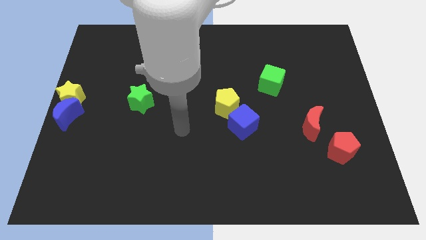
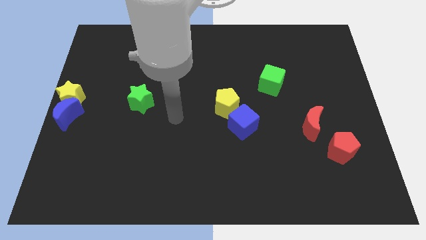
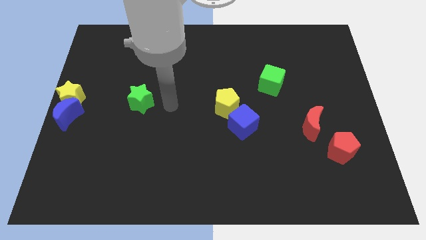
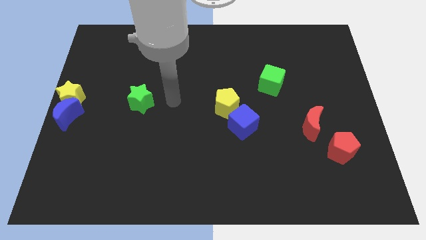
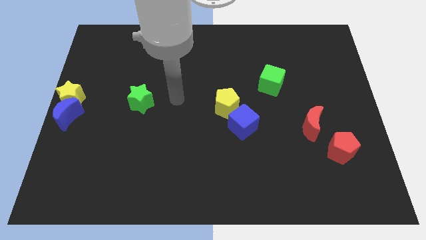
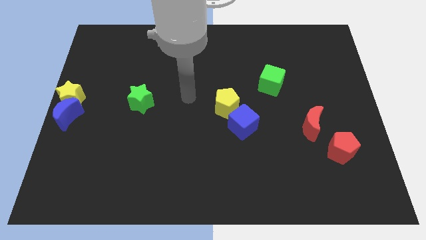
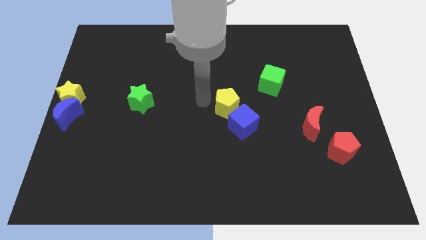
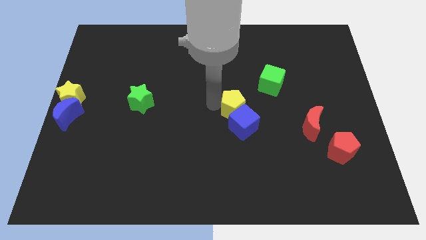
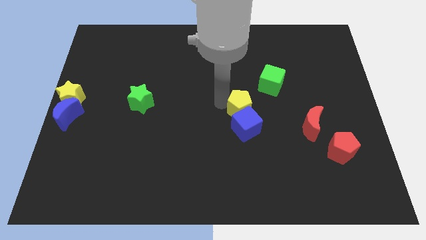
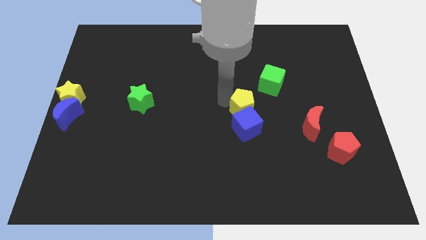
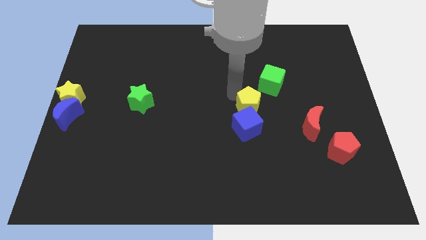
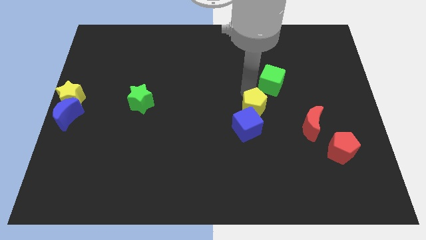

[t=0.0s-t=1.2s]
put the yellow pentagon at the top of the blue cube

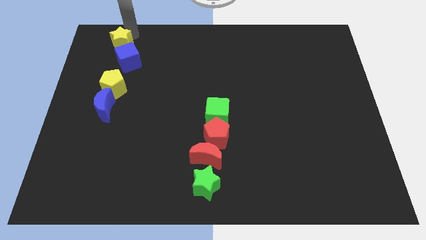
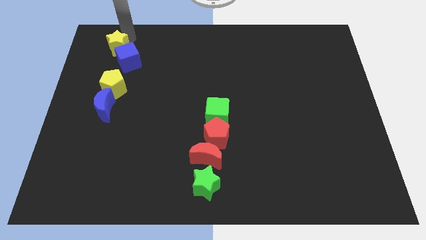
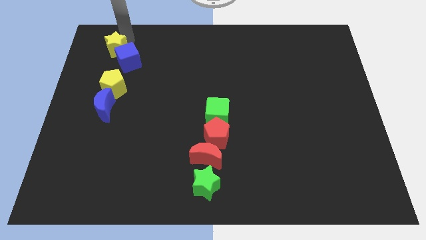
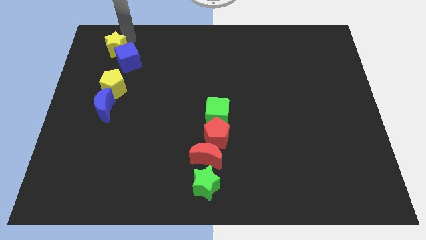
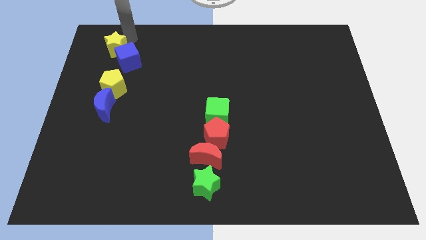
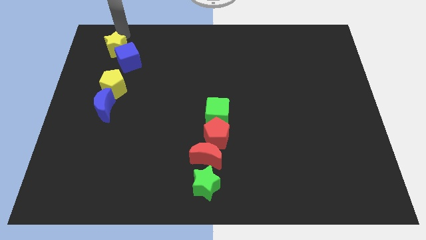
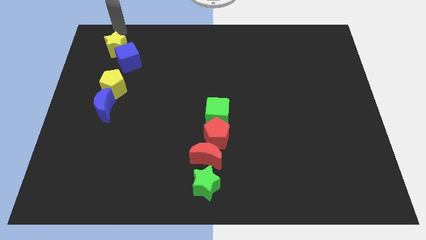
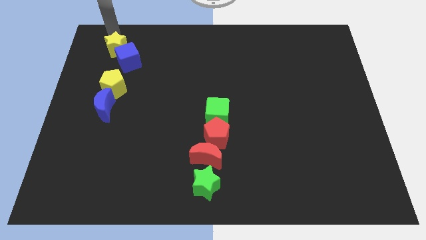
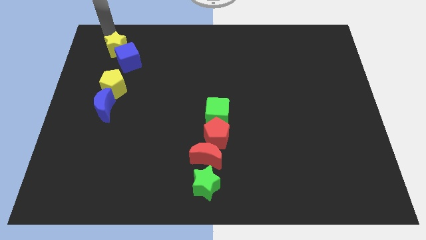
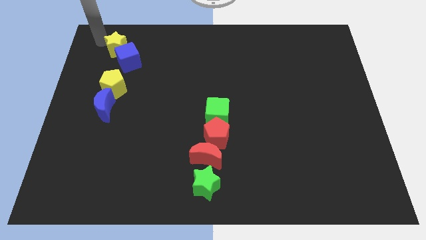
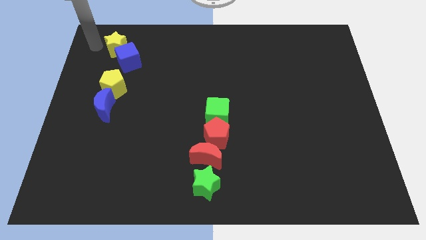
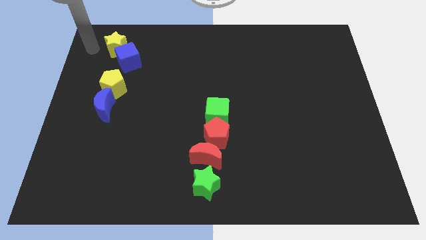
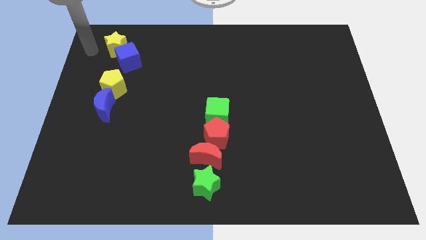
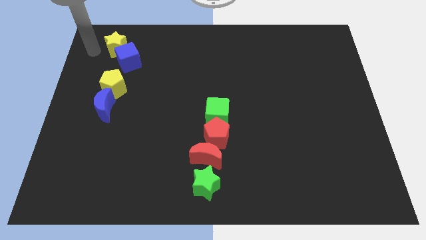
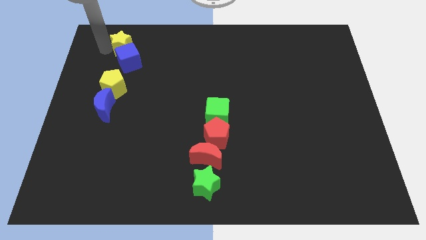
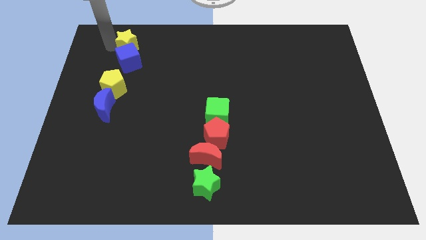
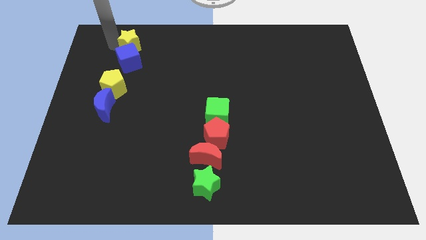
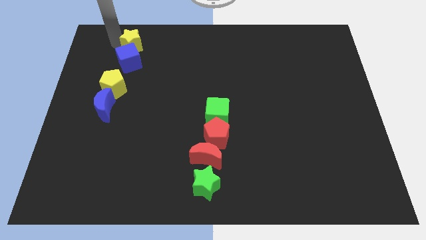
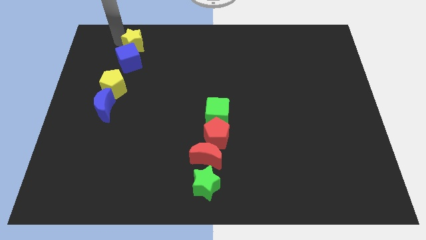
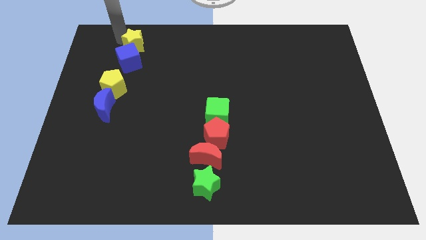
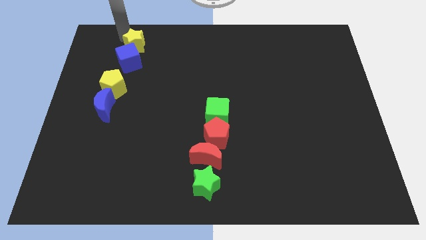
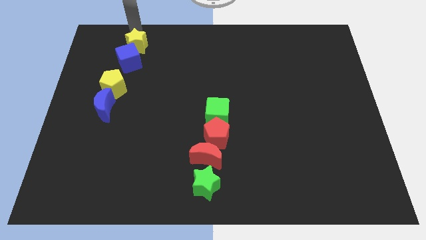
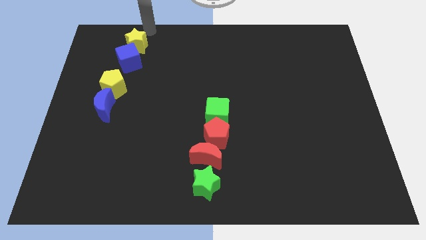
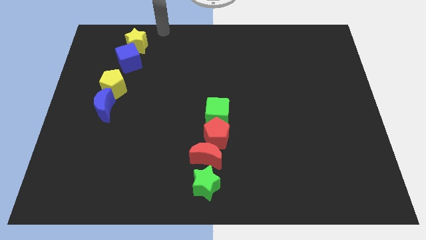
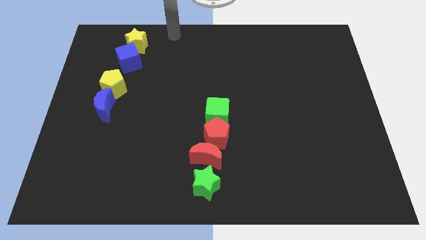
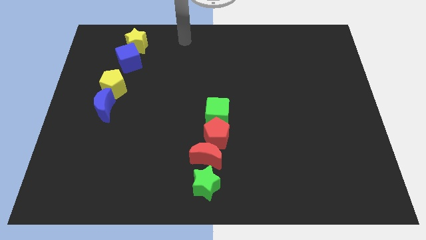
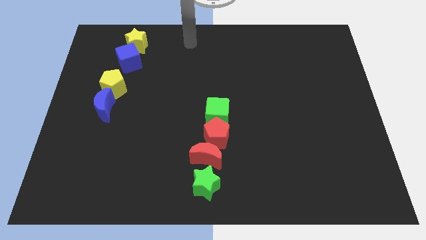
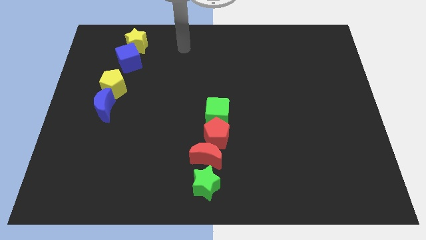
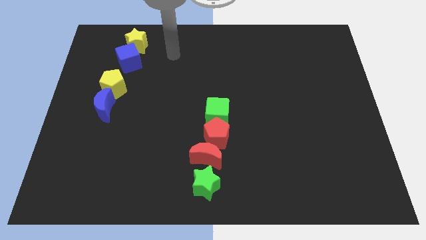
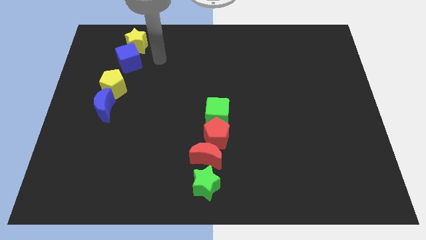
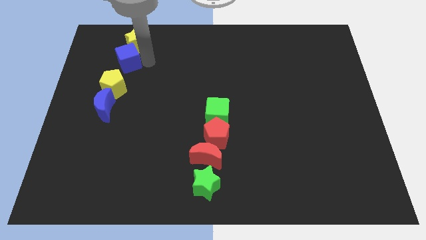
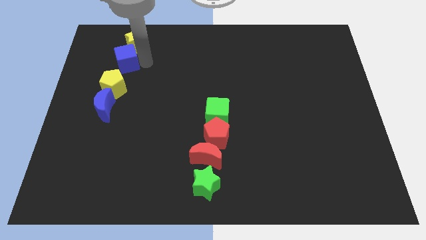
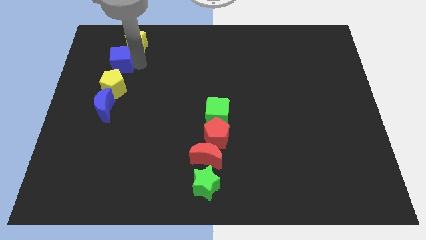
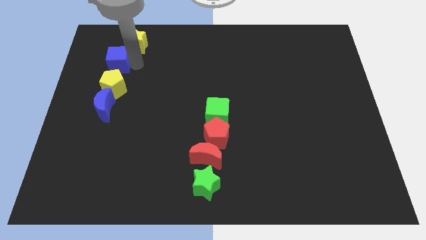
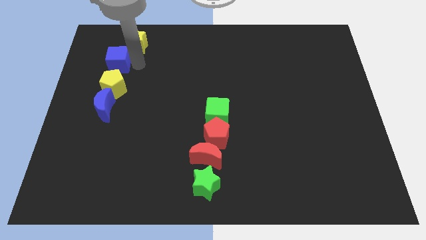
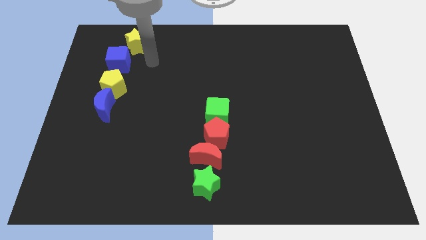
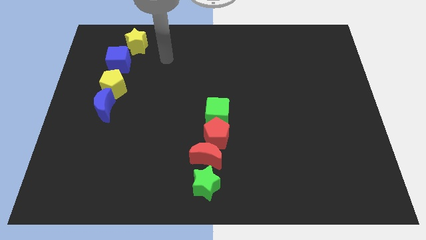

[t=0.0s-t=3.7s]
adjust blue cube and the yellow star to form a line with yellow pentagon and the blue crescent

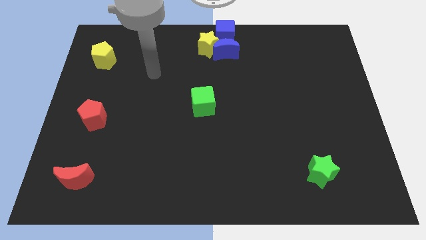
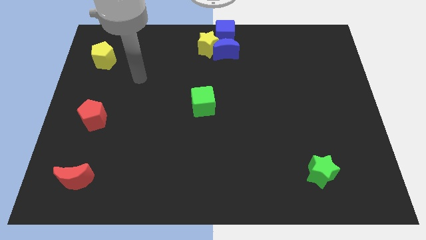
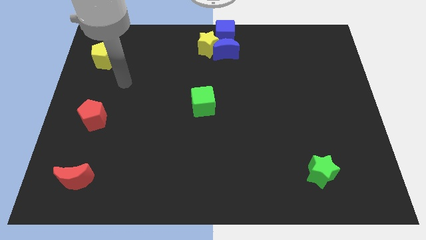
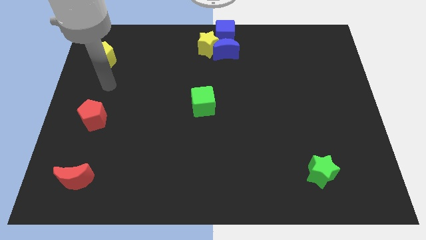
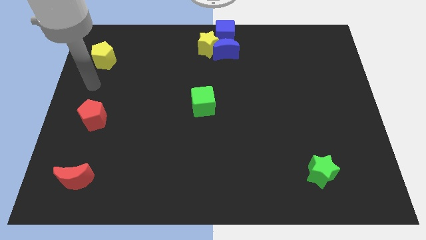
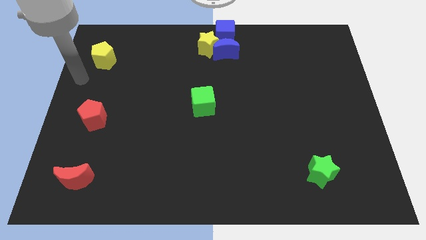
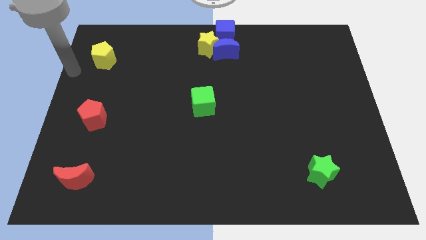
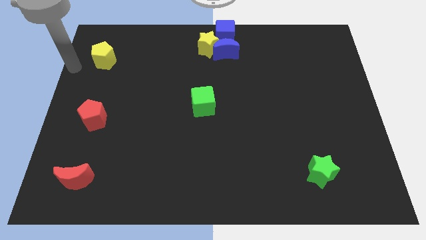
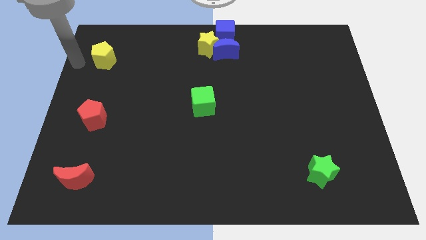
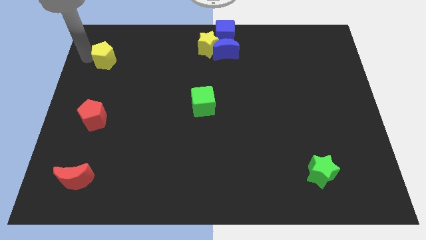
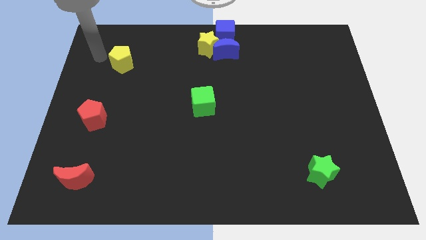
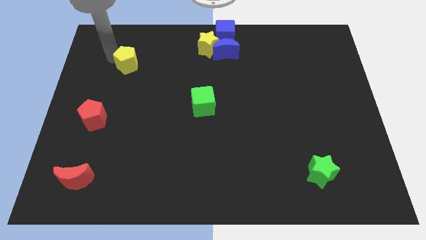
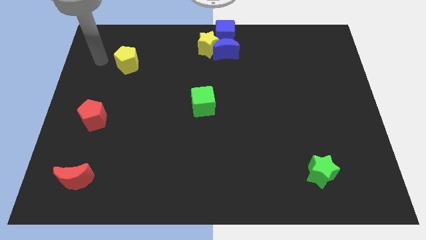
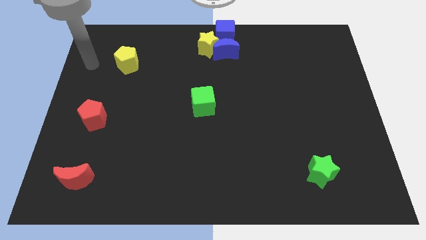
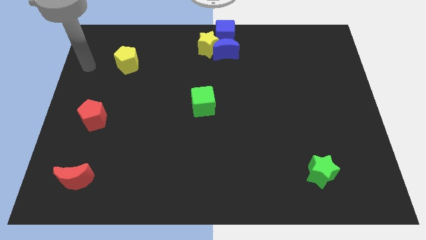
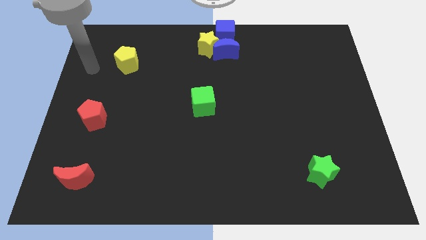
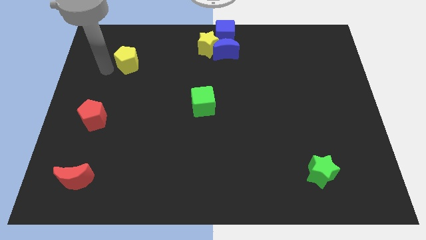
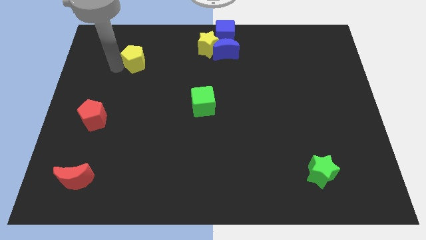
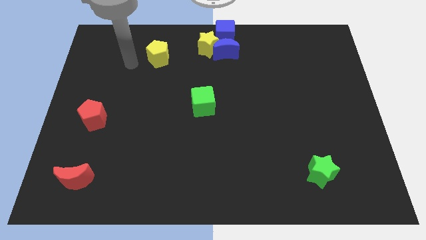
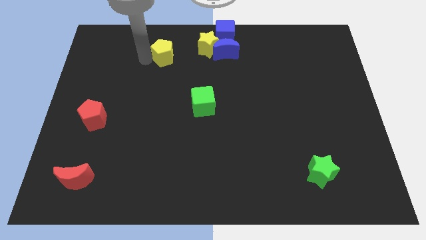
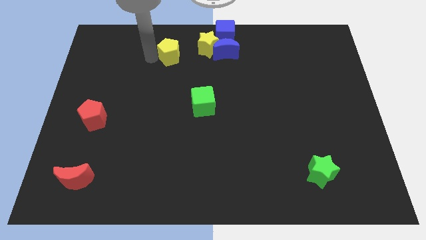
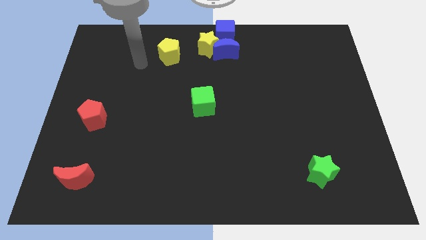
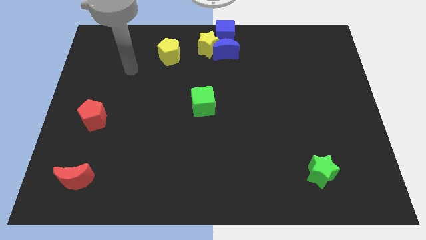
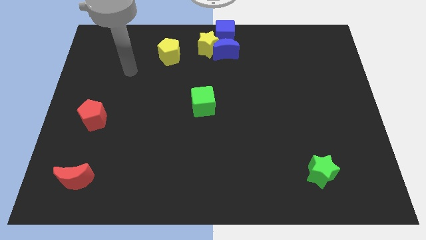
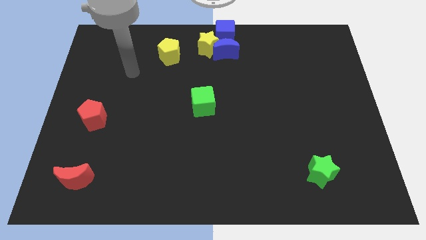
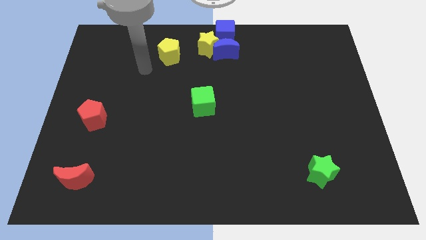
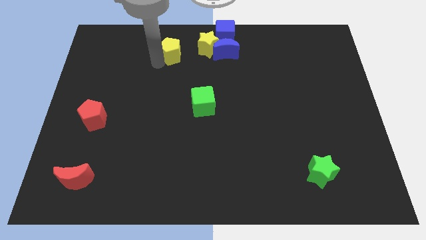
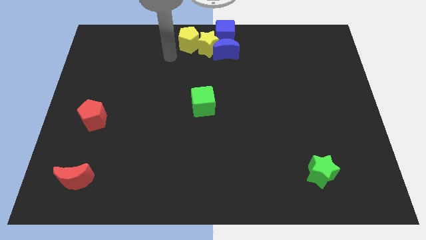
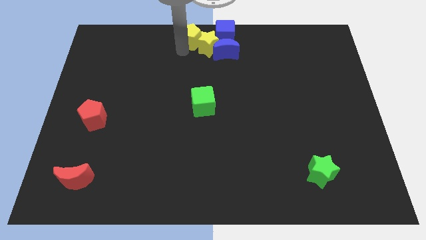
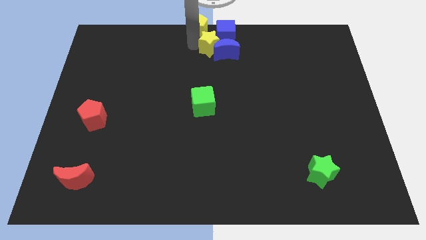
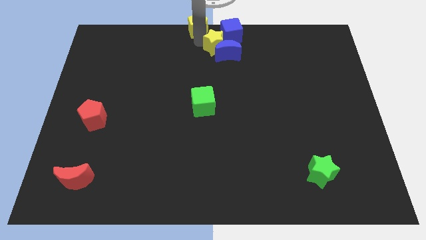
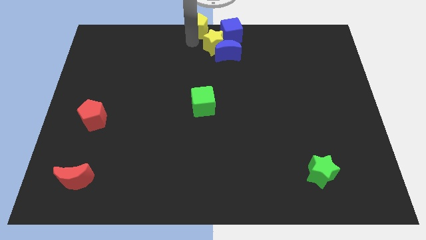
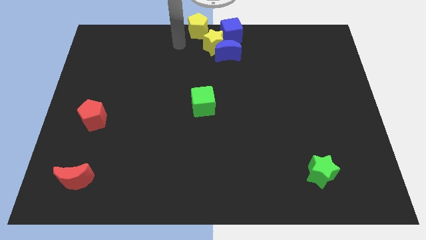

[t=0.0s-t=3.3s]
push yellow pentagon diagonally top left yellow star

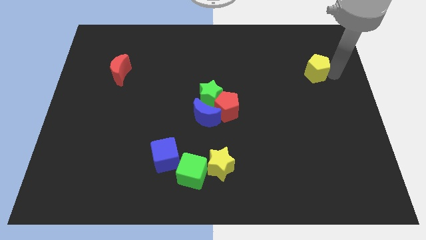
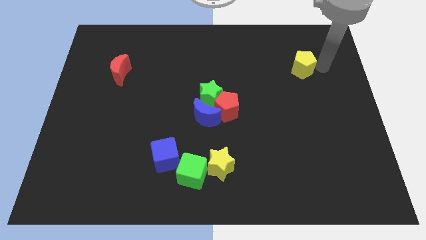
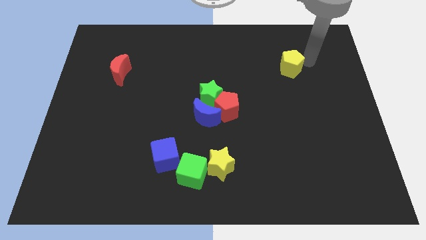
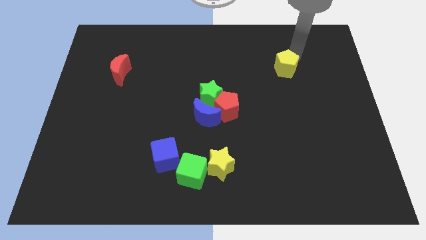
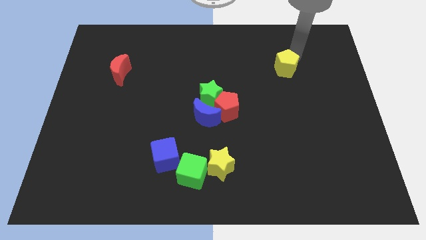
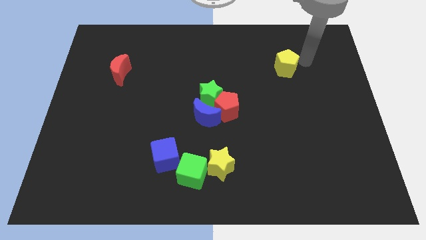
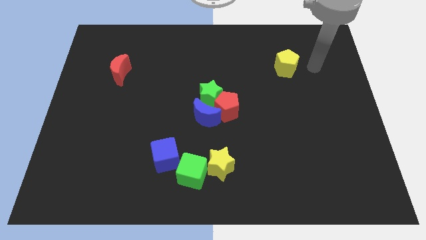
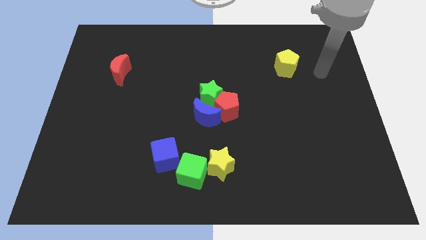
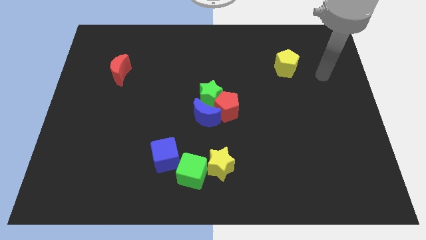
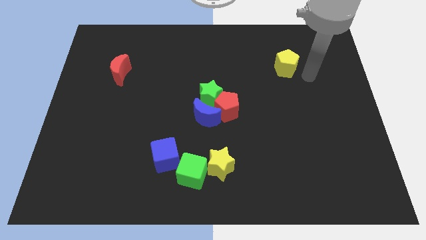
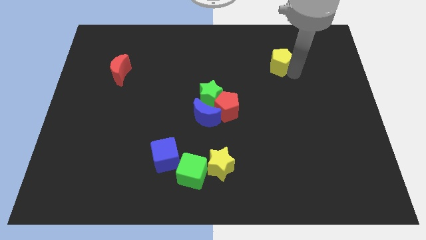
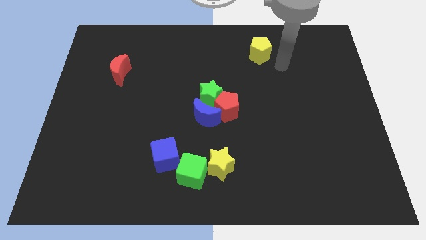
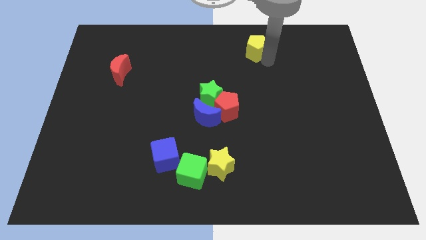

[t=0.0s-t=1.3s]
push the yellow pentagon to the left
